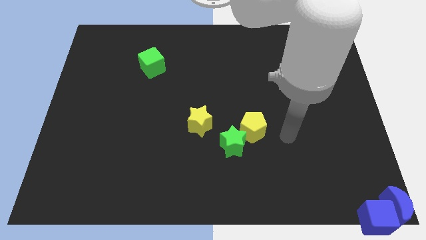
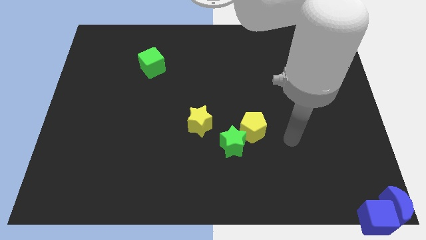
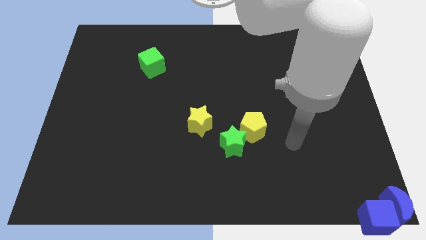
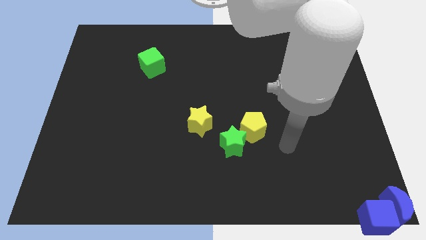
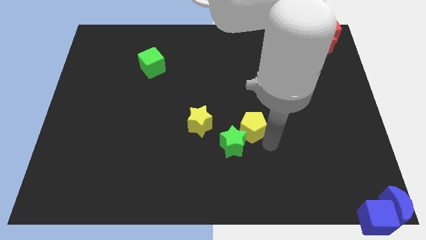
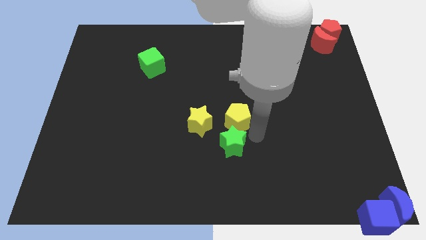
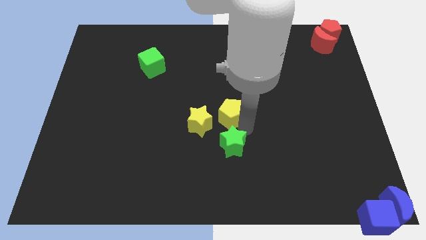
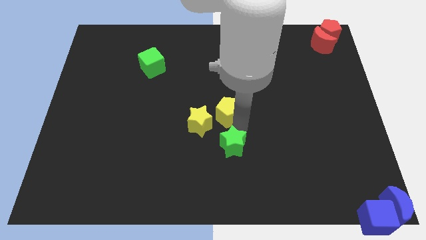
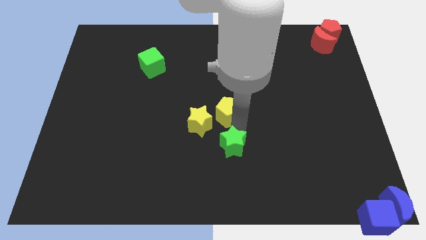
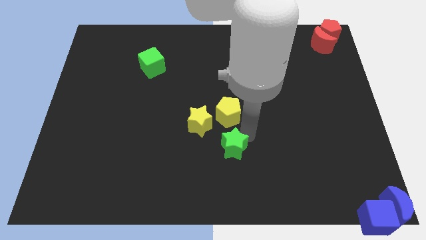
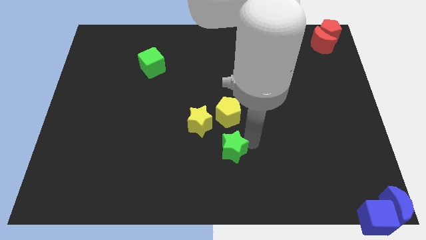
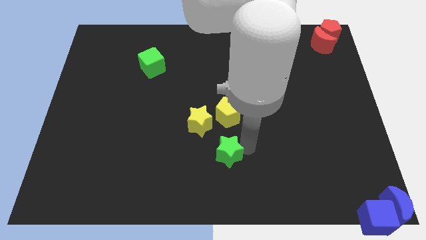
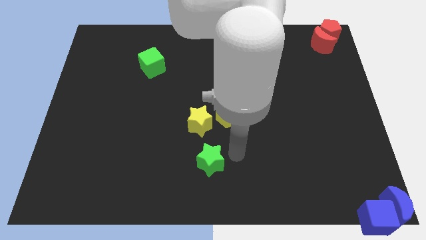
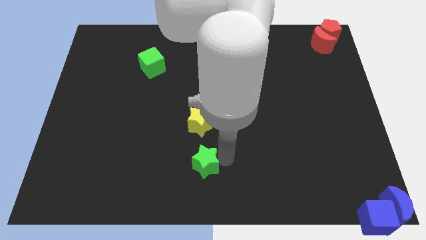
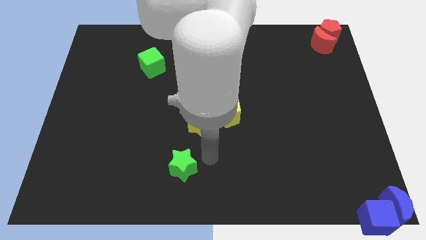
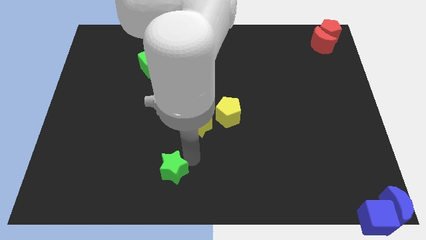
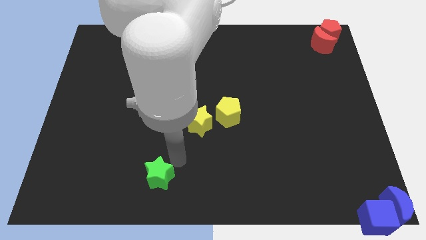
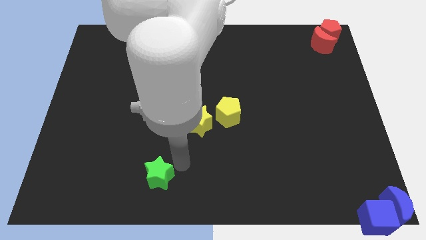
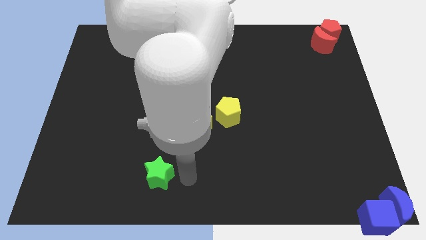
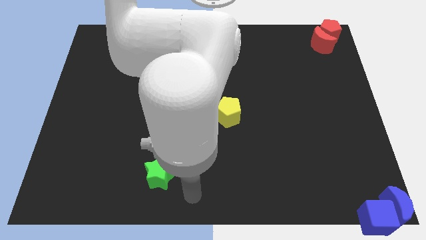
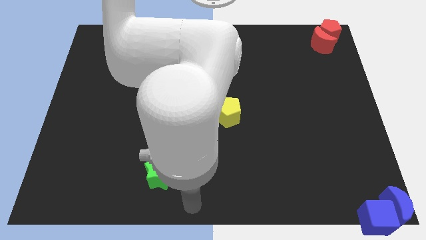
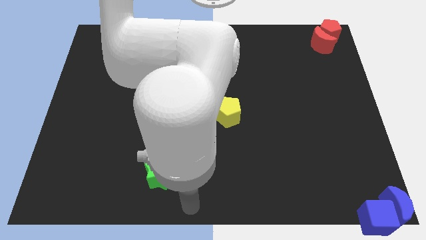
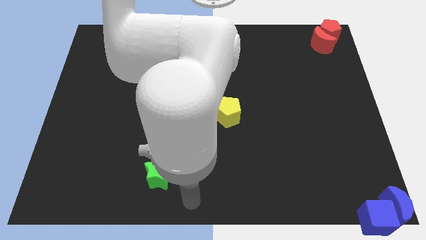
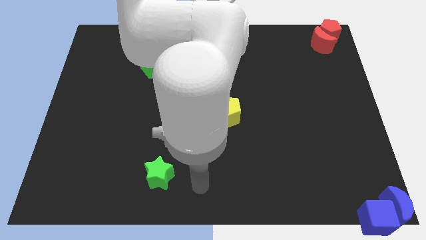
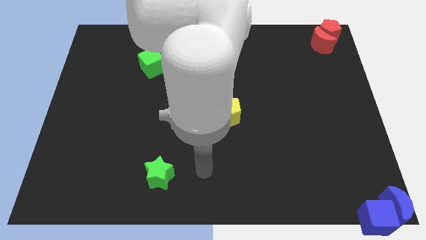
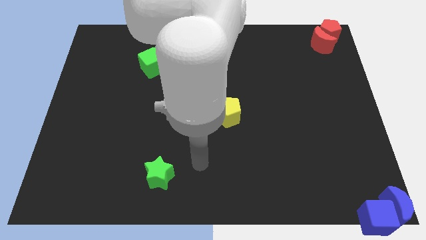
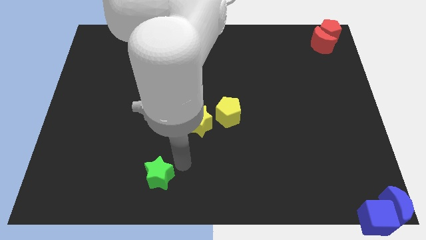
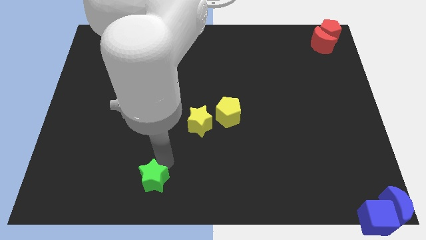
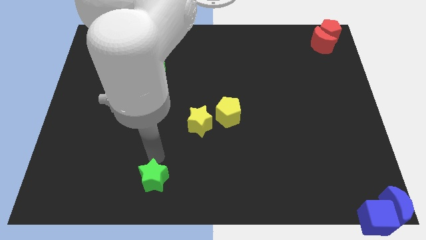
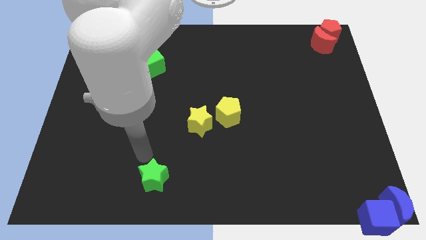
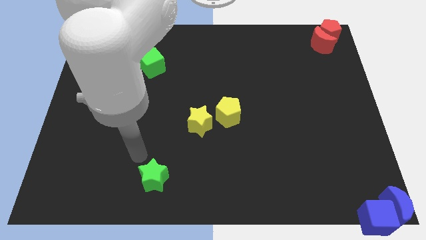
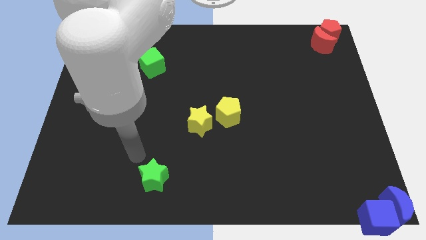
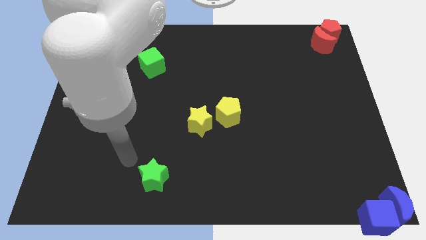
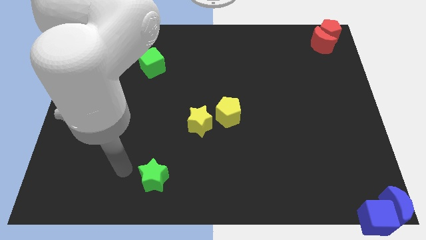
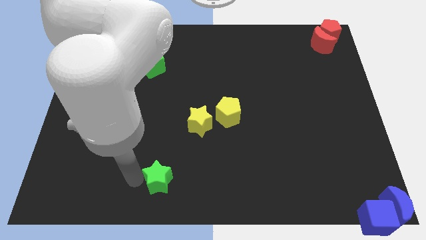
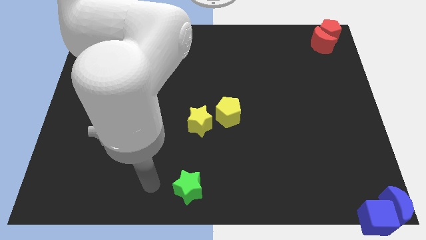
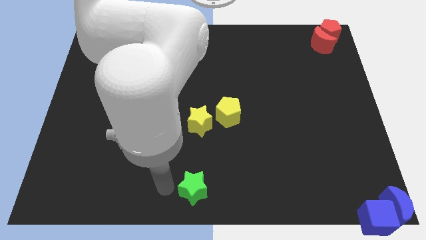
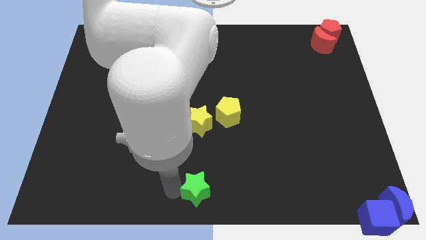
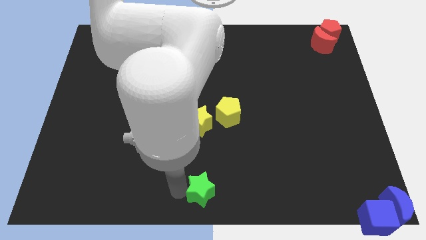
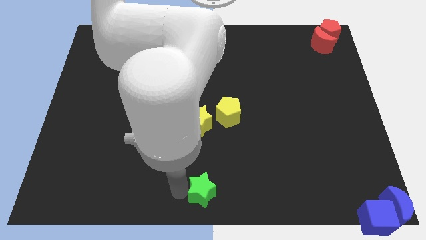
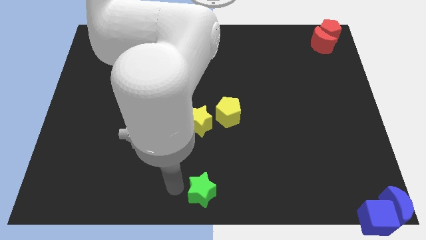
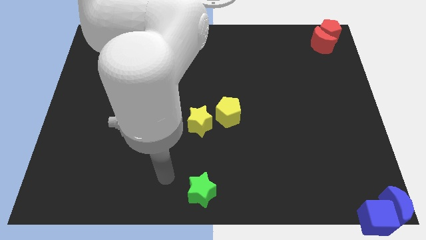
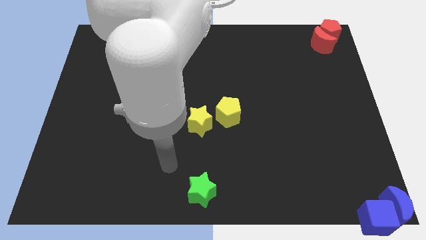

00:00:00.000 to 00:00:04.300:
place the green star below the yellow star

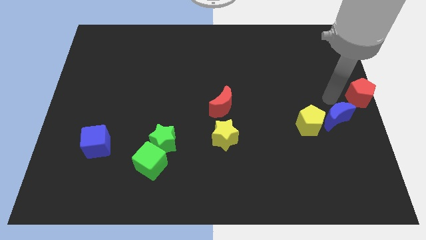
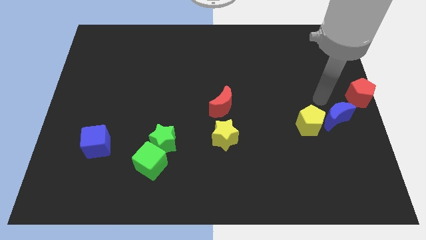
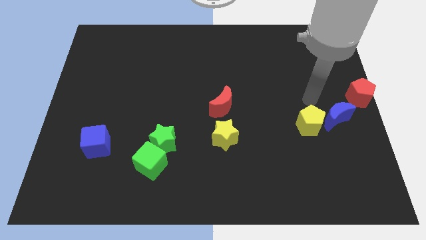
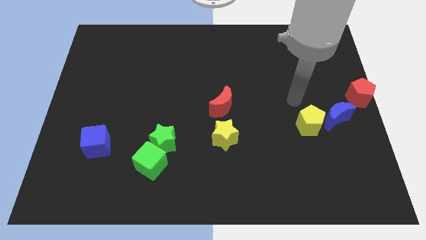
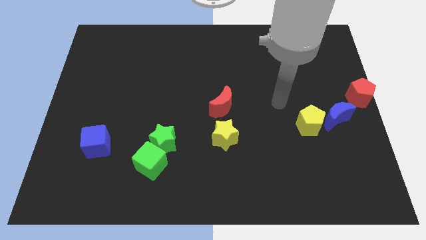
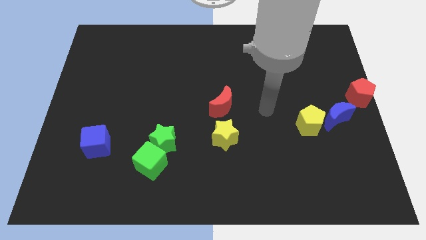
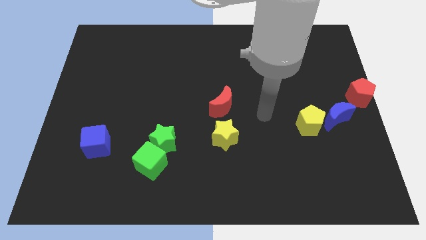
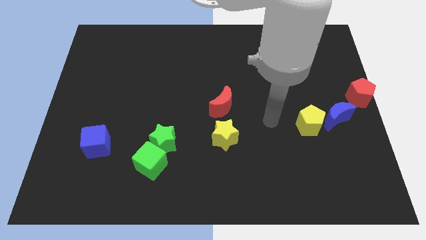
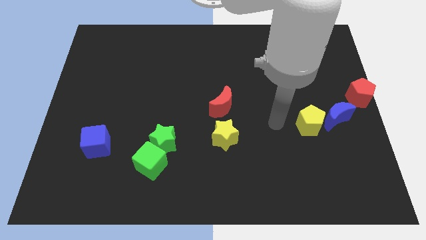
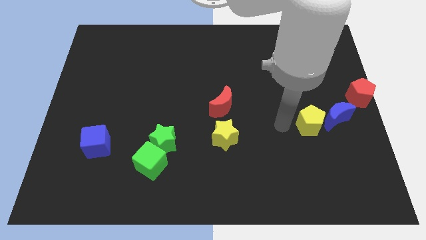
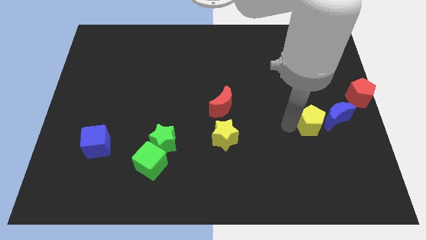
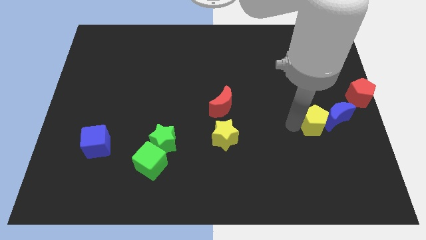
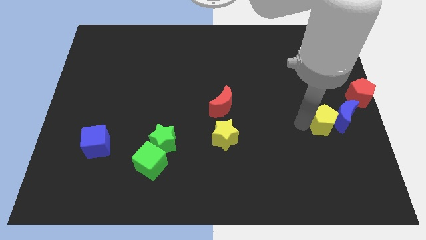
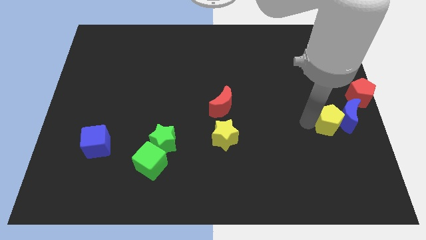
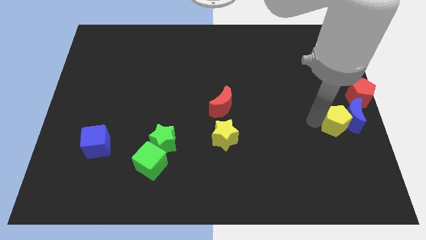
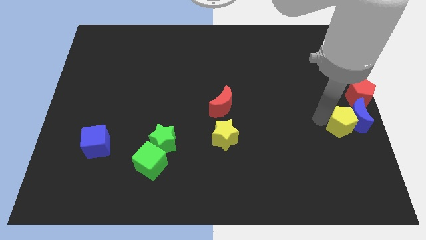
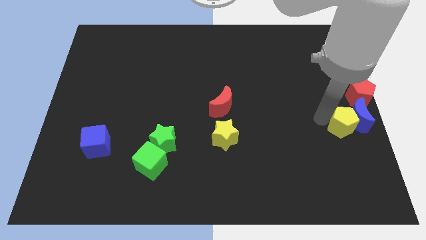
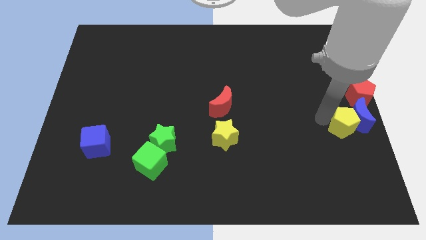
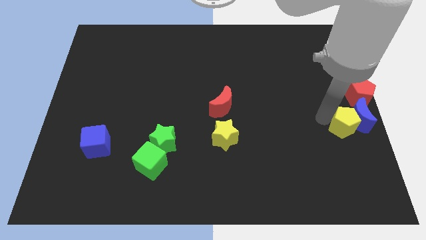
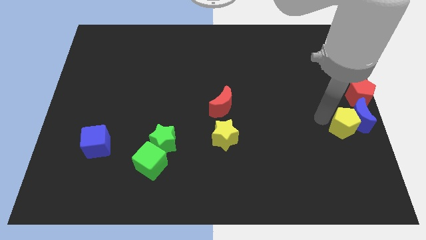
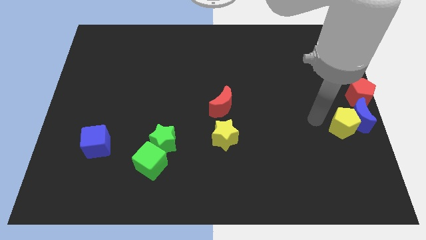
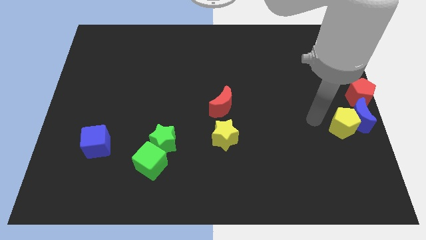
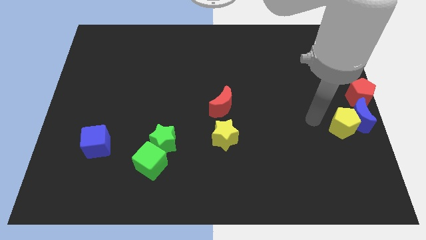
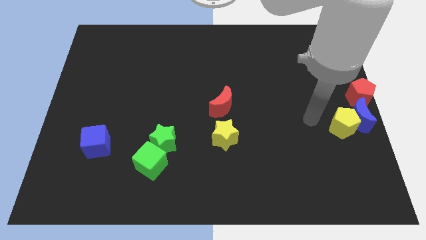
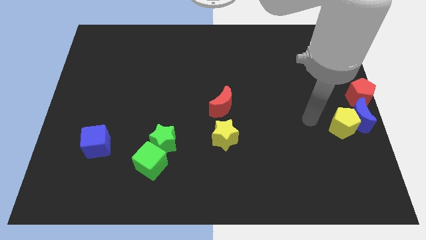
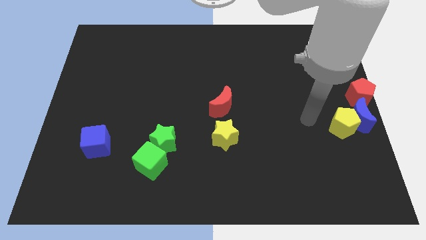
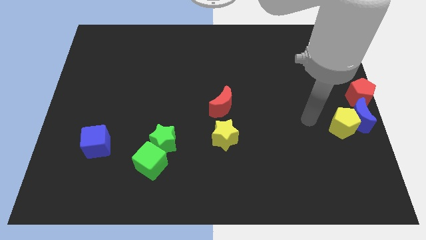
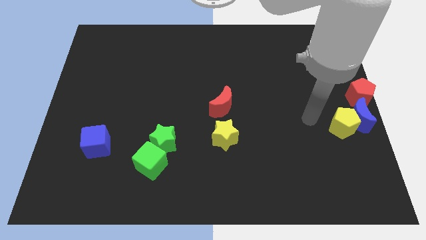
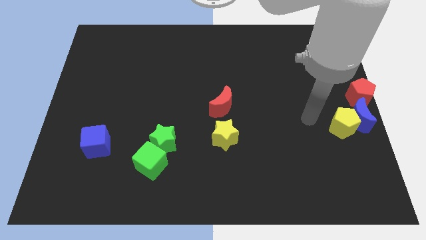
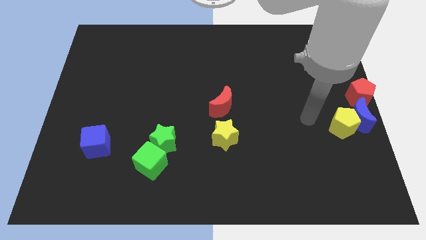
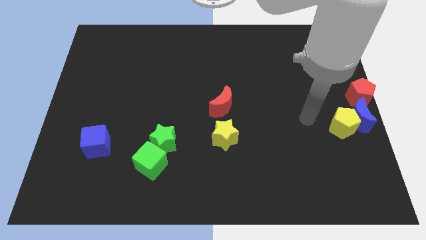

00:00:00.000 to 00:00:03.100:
push the yellow pentagon along with blue crescent to the right

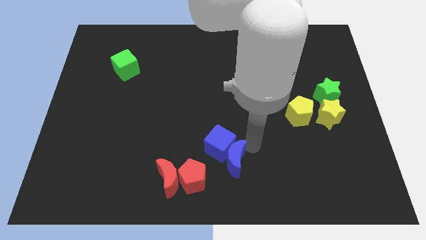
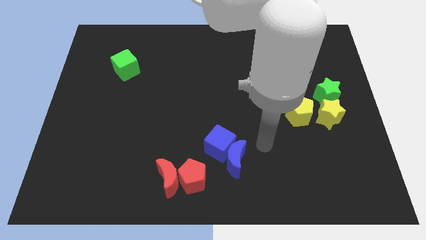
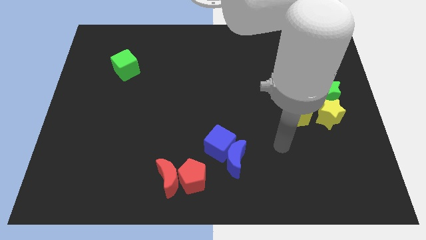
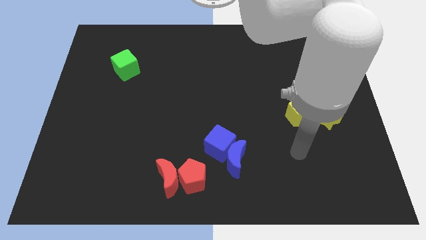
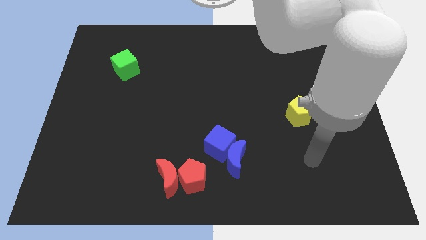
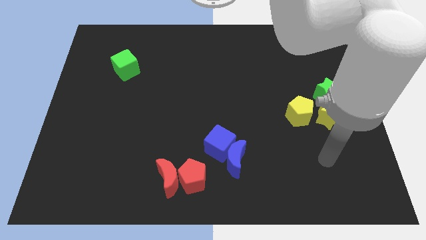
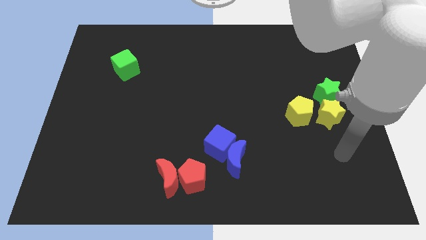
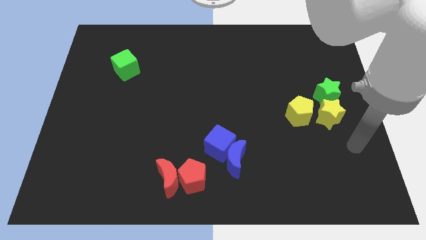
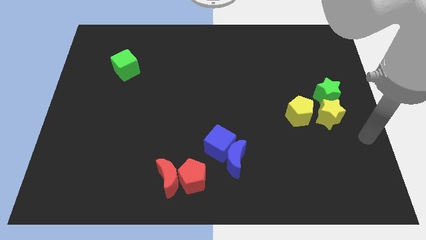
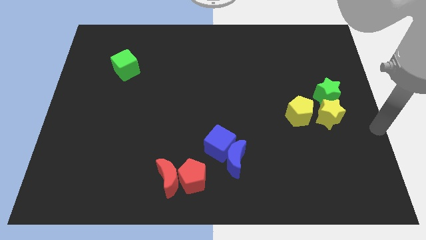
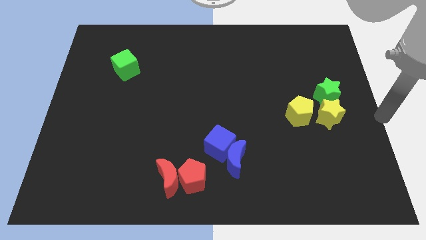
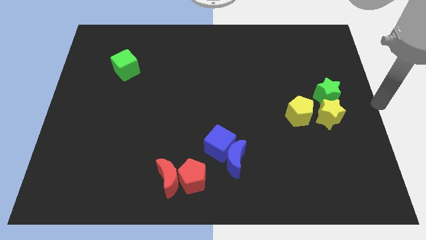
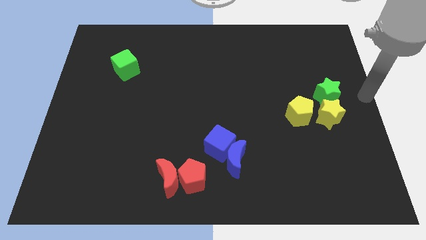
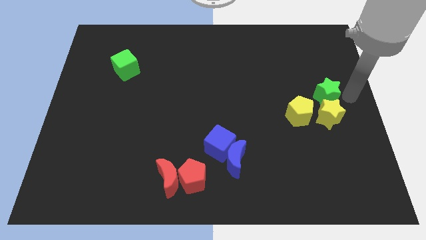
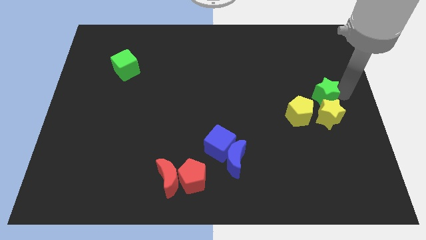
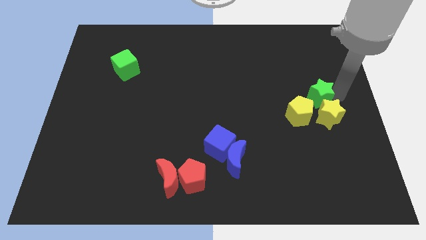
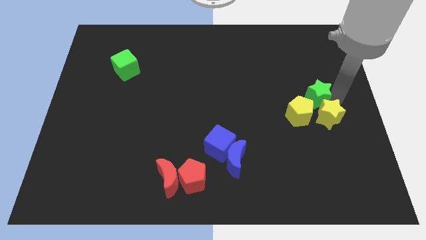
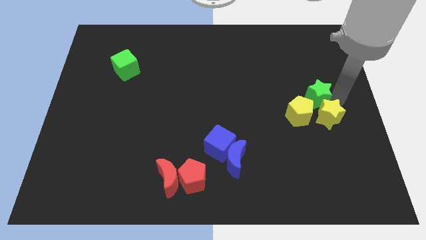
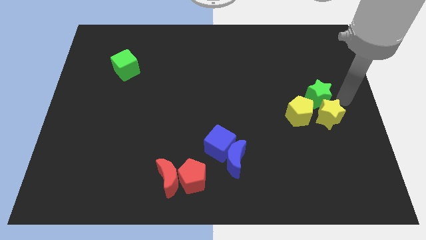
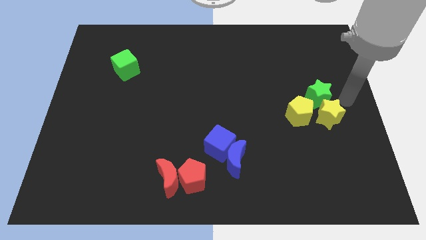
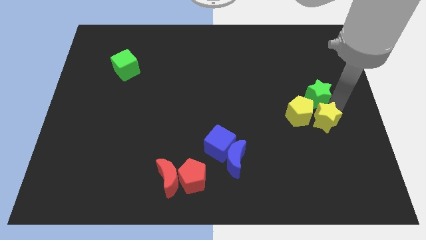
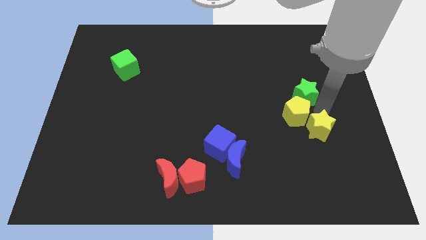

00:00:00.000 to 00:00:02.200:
move the arm away from the blue moon
